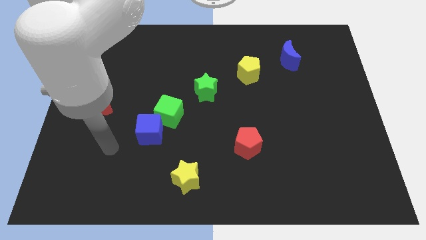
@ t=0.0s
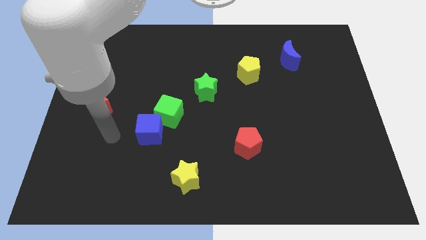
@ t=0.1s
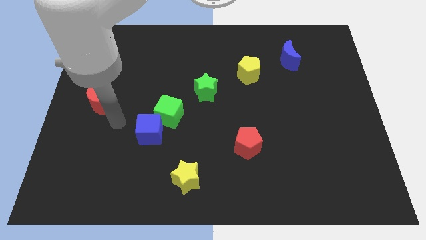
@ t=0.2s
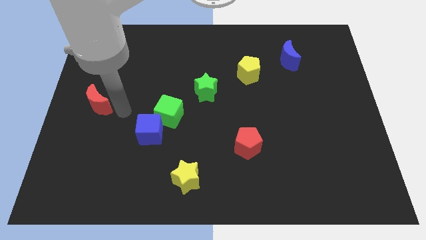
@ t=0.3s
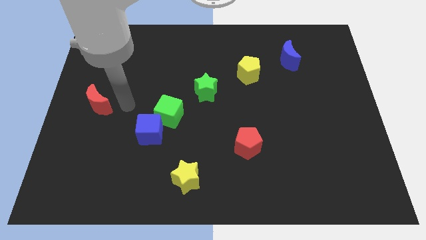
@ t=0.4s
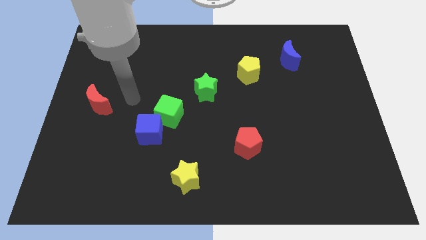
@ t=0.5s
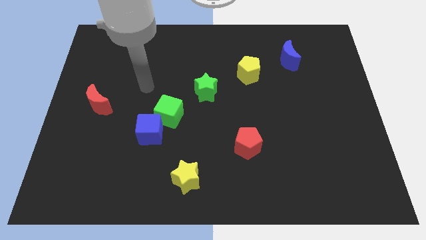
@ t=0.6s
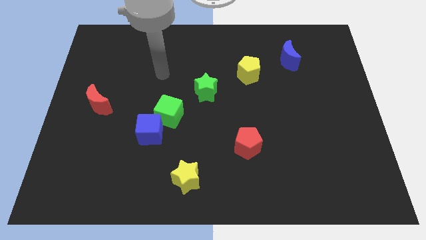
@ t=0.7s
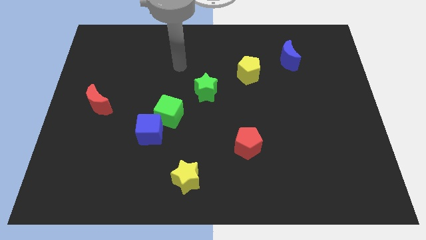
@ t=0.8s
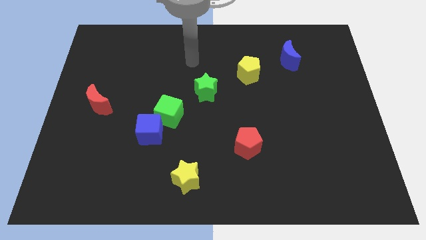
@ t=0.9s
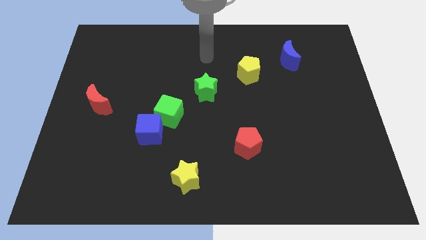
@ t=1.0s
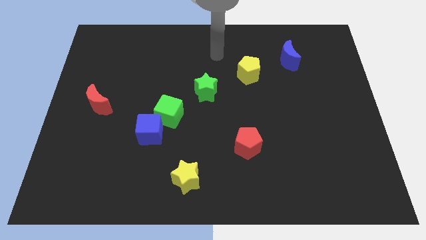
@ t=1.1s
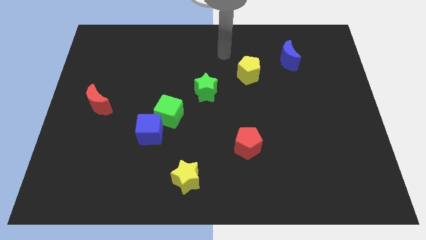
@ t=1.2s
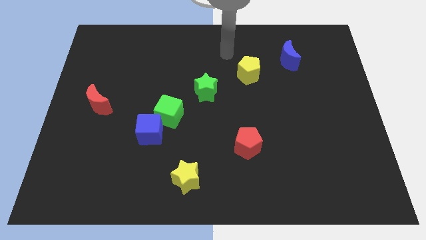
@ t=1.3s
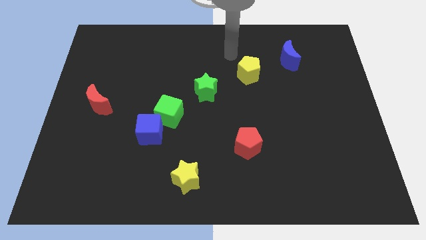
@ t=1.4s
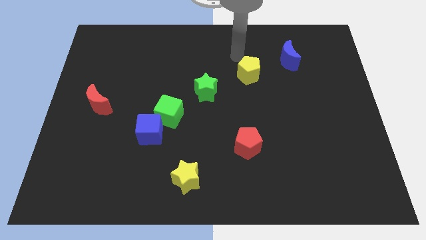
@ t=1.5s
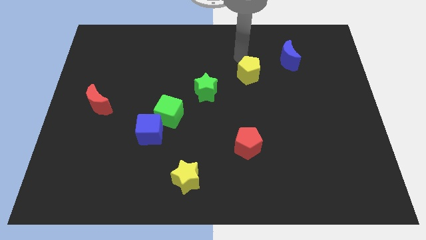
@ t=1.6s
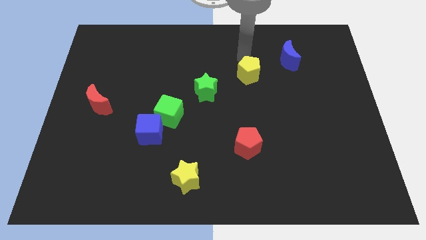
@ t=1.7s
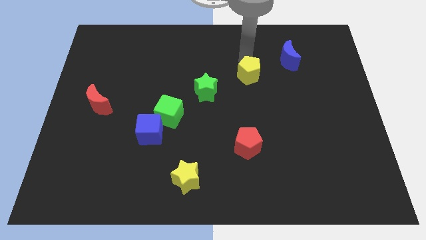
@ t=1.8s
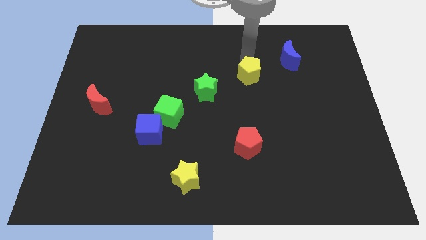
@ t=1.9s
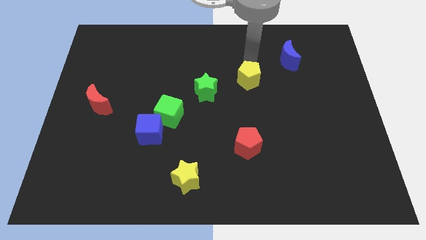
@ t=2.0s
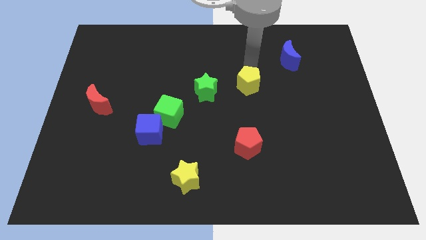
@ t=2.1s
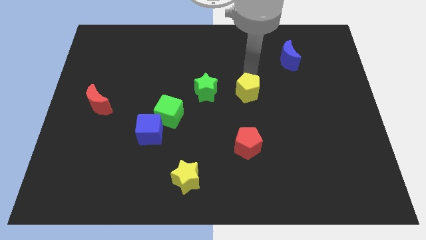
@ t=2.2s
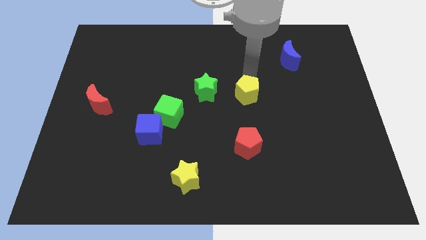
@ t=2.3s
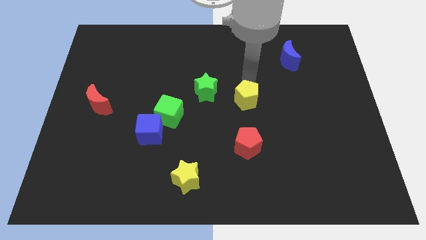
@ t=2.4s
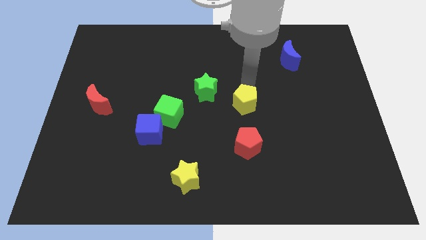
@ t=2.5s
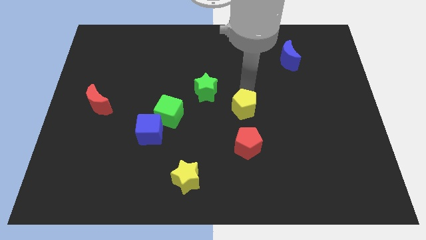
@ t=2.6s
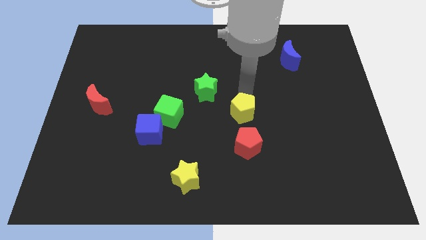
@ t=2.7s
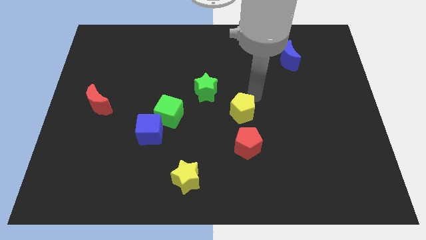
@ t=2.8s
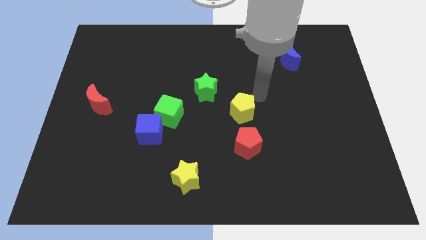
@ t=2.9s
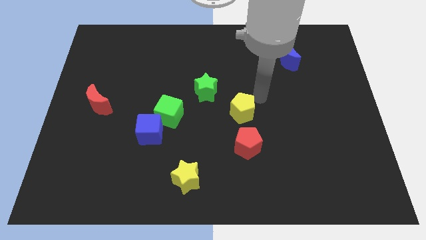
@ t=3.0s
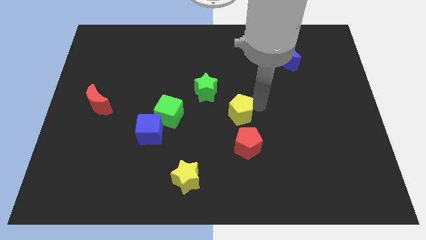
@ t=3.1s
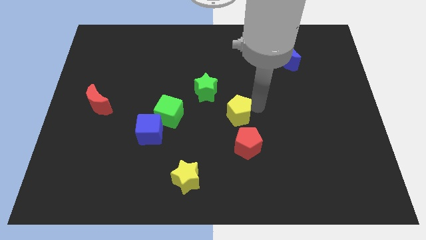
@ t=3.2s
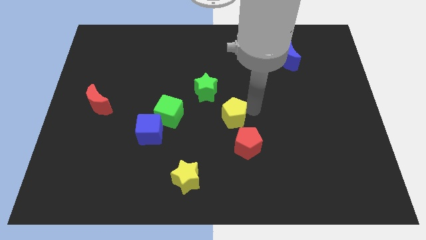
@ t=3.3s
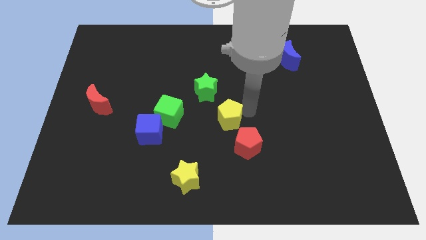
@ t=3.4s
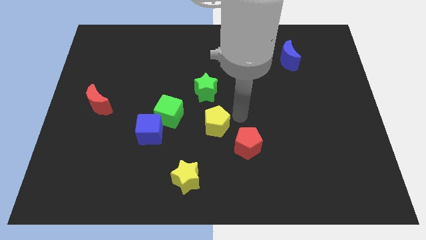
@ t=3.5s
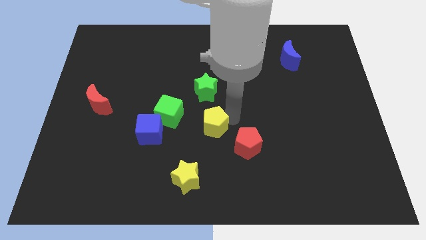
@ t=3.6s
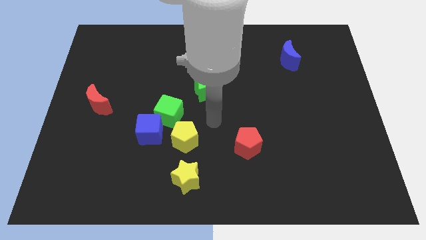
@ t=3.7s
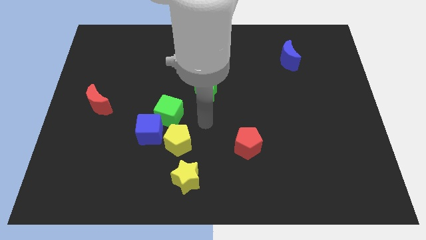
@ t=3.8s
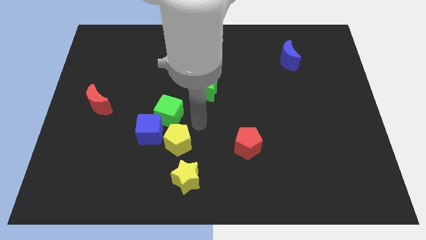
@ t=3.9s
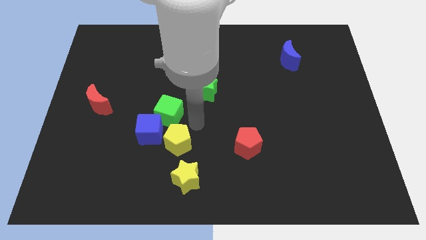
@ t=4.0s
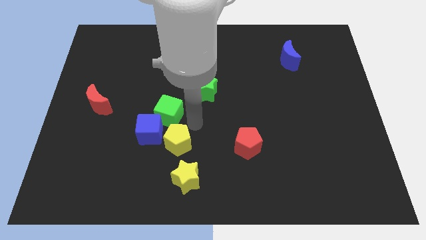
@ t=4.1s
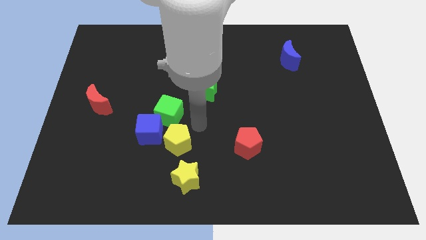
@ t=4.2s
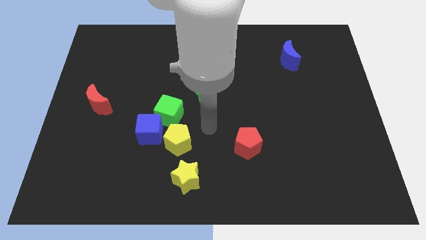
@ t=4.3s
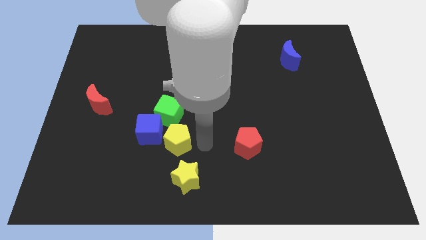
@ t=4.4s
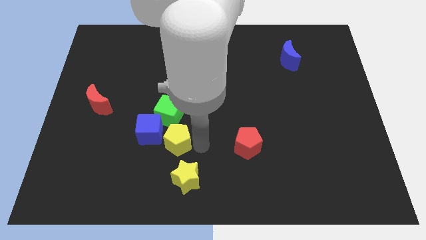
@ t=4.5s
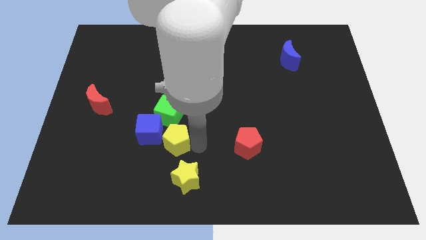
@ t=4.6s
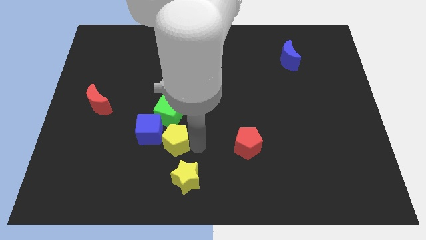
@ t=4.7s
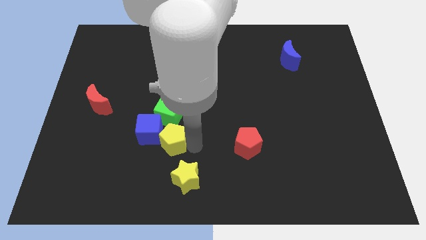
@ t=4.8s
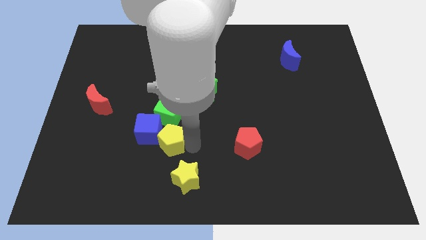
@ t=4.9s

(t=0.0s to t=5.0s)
put the yellow pentagon close to the blue cube

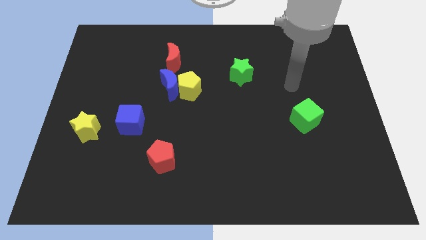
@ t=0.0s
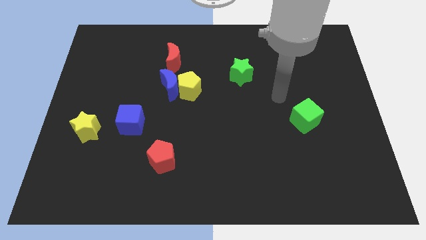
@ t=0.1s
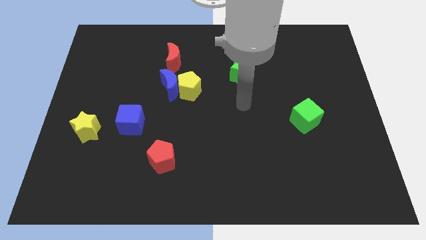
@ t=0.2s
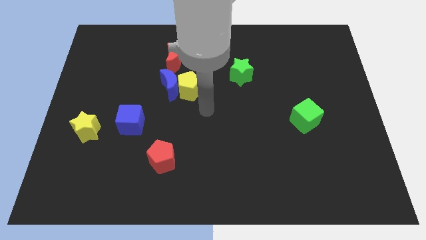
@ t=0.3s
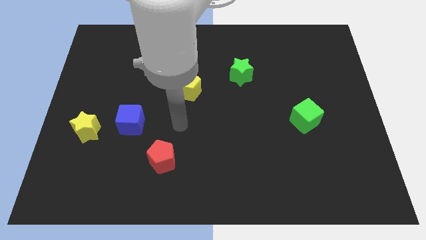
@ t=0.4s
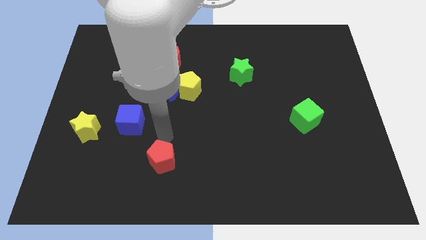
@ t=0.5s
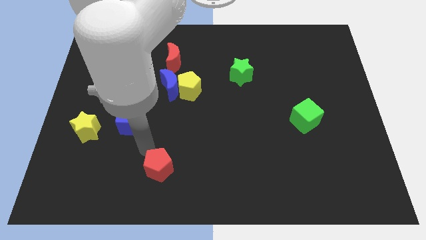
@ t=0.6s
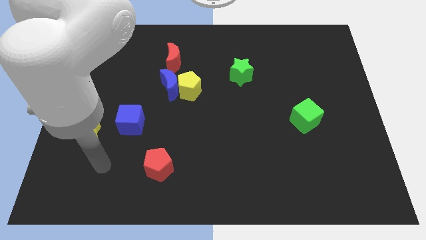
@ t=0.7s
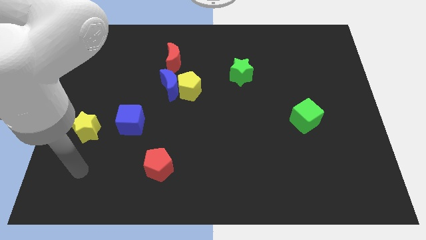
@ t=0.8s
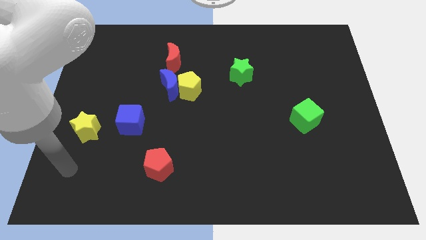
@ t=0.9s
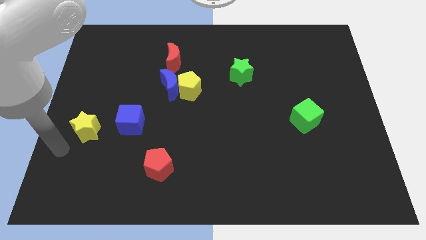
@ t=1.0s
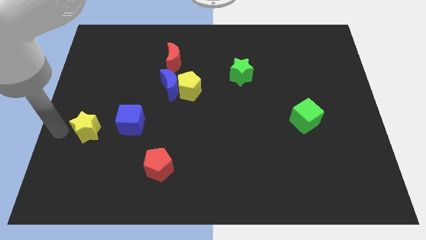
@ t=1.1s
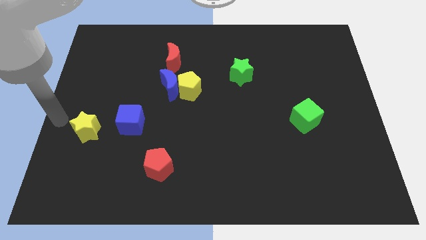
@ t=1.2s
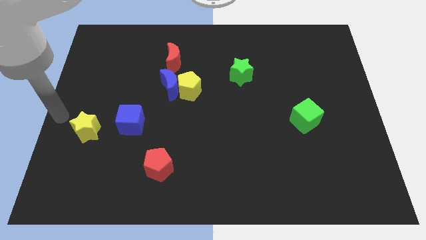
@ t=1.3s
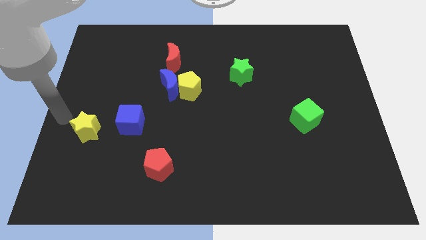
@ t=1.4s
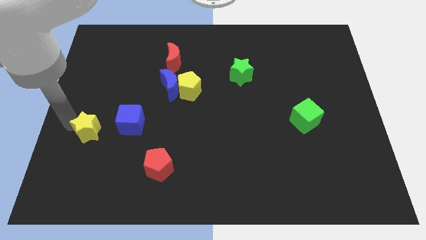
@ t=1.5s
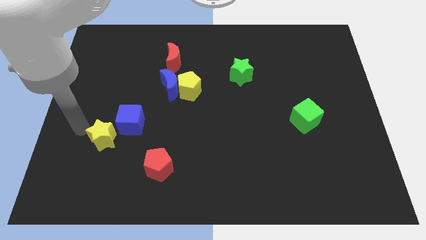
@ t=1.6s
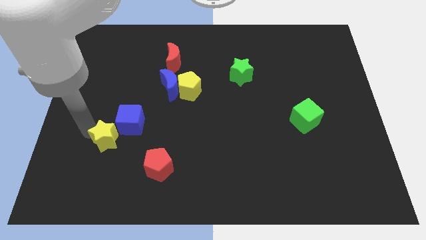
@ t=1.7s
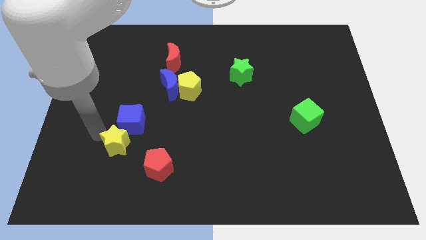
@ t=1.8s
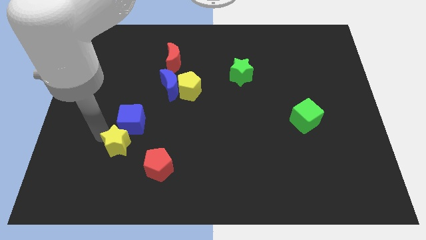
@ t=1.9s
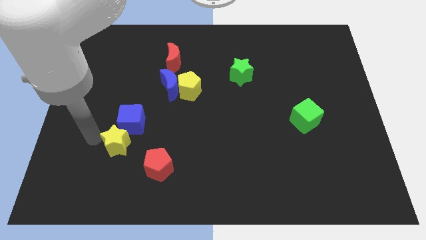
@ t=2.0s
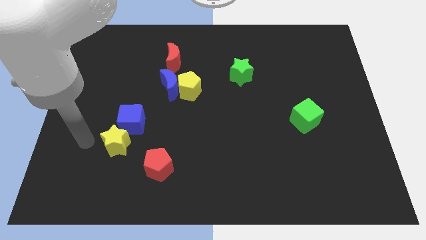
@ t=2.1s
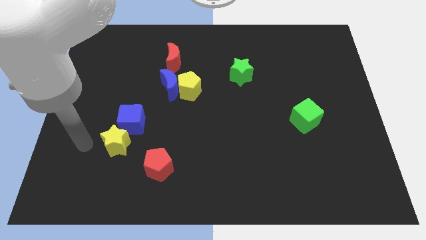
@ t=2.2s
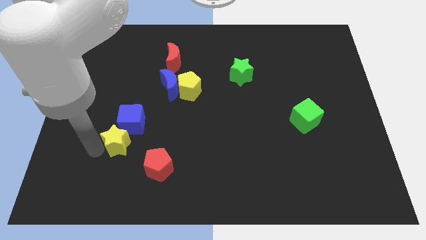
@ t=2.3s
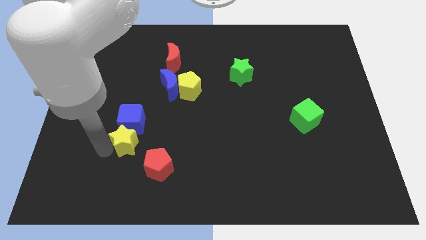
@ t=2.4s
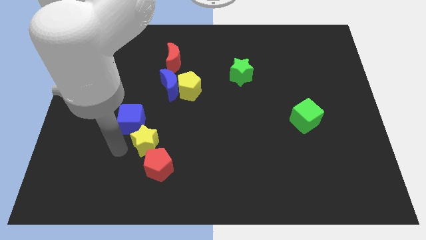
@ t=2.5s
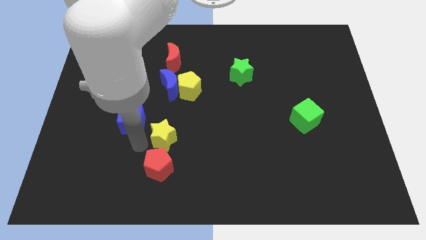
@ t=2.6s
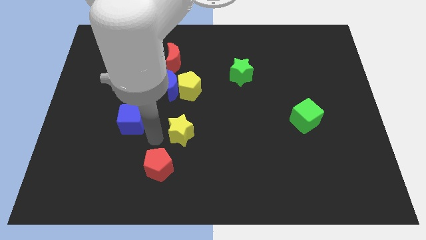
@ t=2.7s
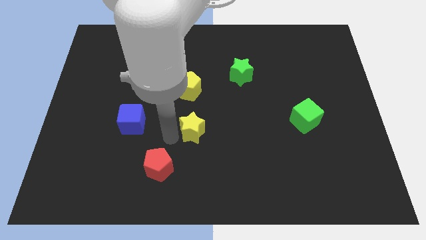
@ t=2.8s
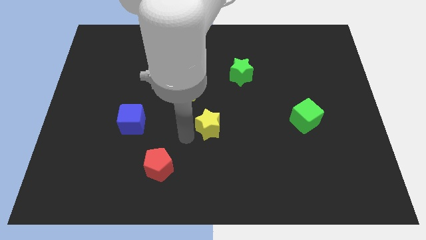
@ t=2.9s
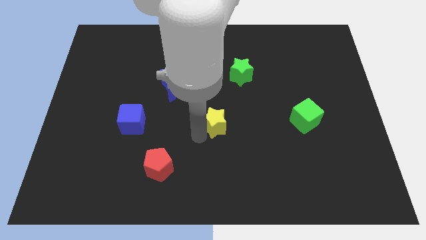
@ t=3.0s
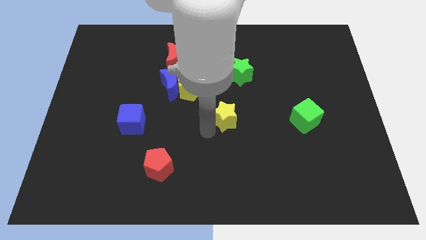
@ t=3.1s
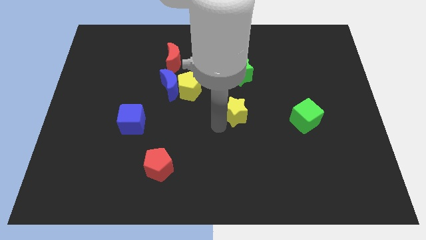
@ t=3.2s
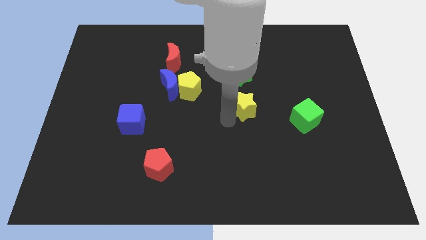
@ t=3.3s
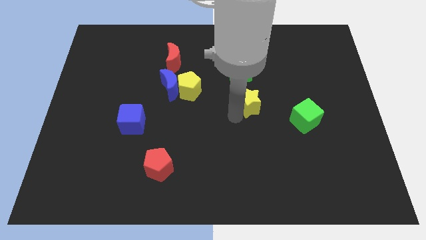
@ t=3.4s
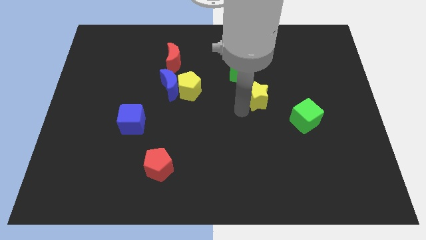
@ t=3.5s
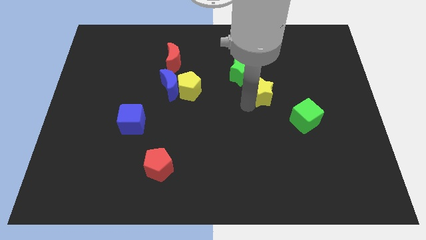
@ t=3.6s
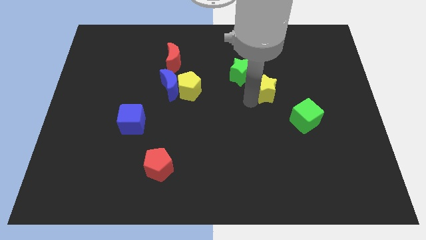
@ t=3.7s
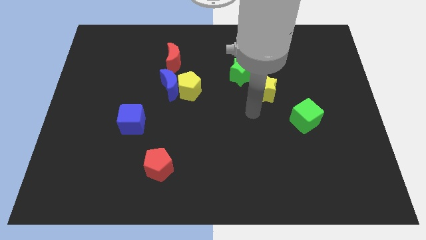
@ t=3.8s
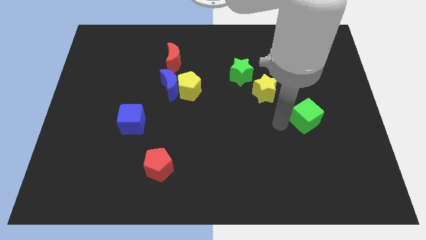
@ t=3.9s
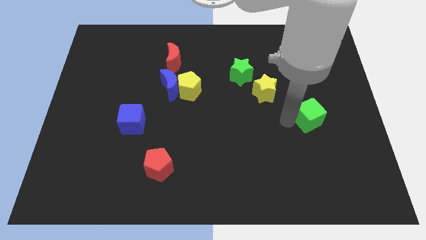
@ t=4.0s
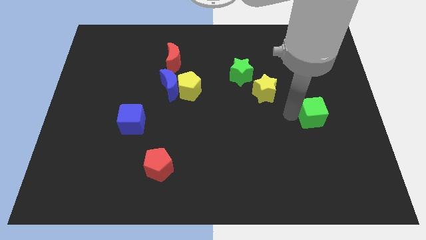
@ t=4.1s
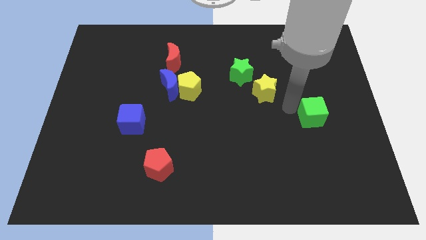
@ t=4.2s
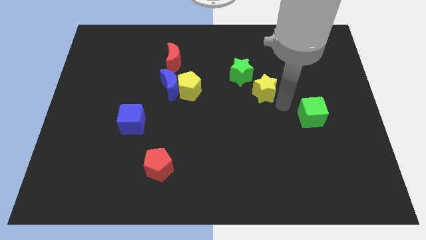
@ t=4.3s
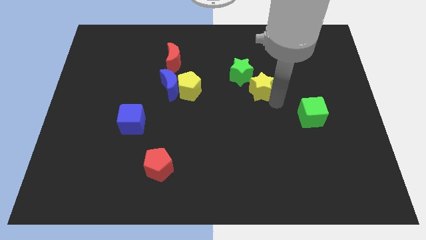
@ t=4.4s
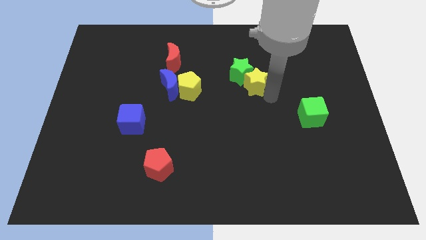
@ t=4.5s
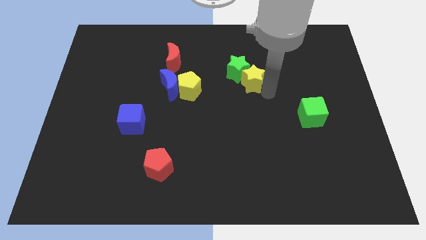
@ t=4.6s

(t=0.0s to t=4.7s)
push the yellow star close to the green star
